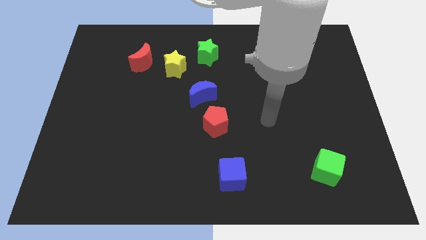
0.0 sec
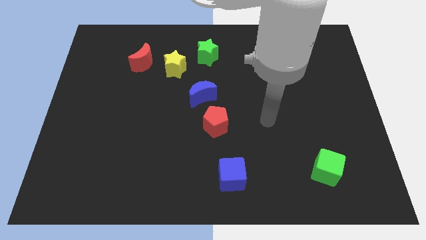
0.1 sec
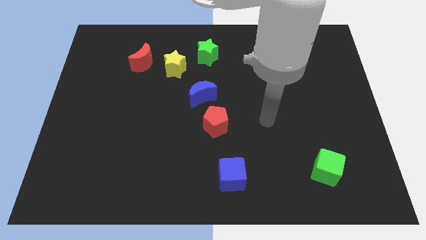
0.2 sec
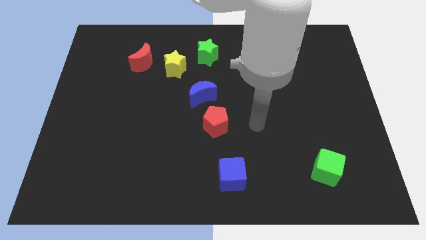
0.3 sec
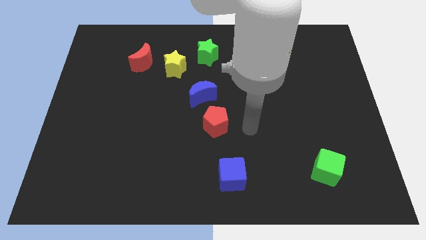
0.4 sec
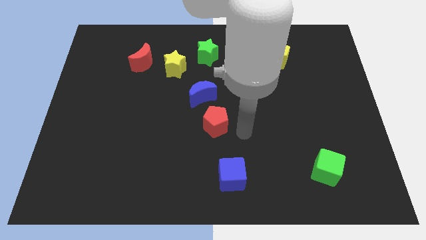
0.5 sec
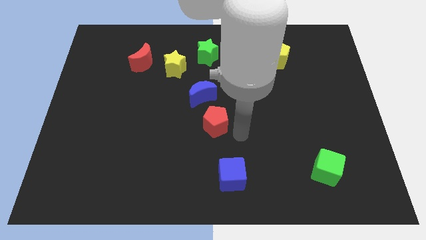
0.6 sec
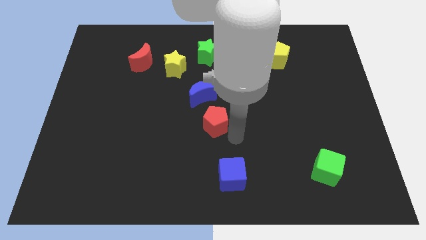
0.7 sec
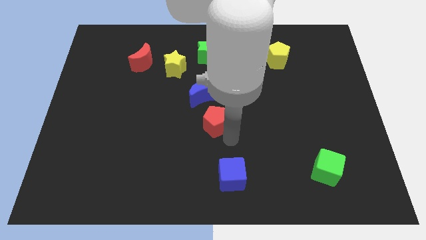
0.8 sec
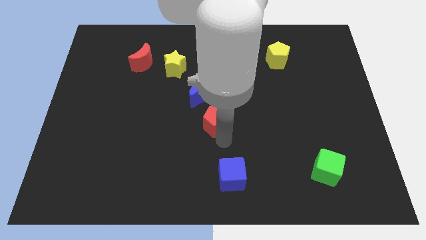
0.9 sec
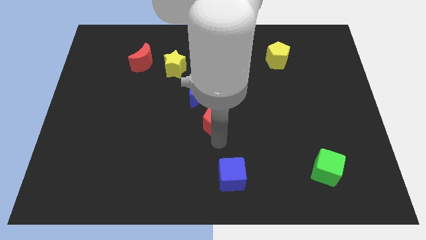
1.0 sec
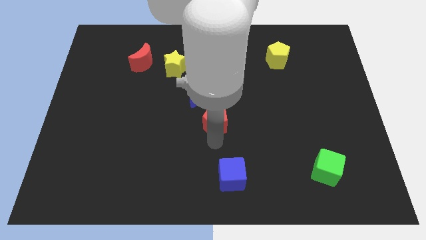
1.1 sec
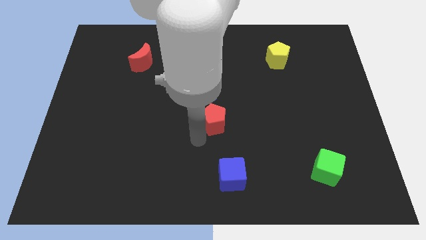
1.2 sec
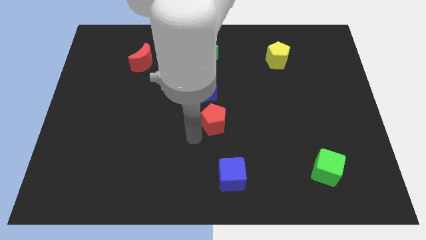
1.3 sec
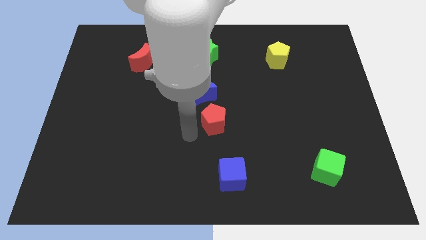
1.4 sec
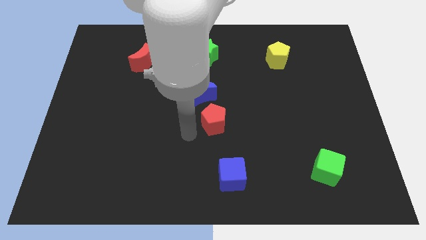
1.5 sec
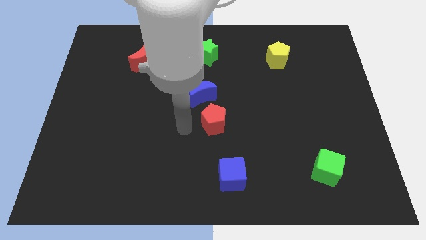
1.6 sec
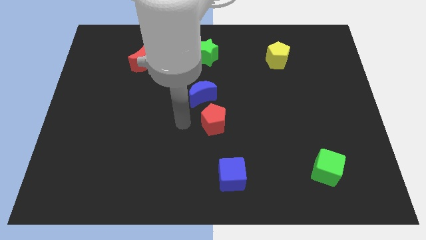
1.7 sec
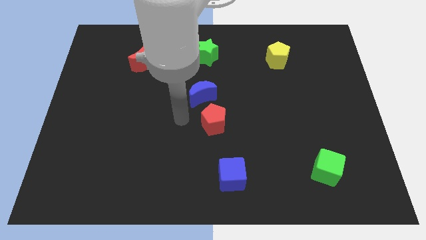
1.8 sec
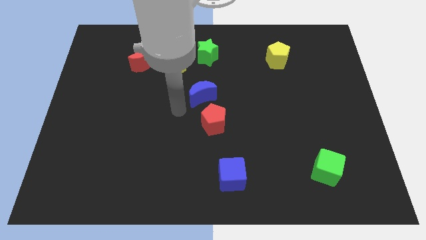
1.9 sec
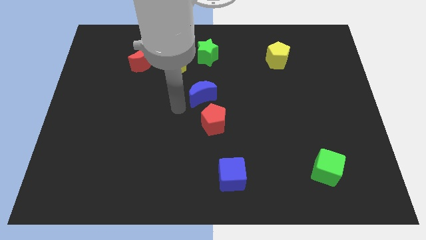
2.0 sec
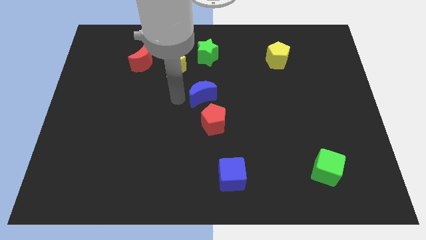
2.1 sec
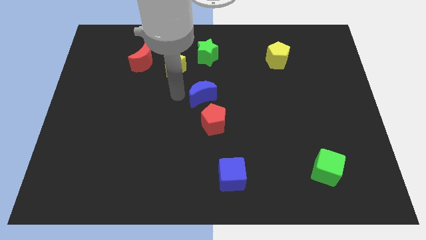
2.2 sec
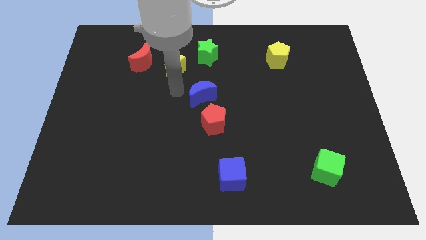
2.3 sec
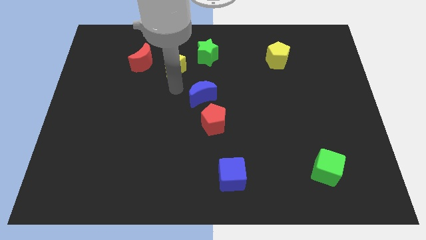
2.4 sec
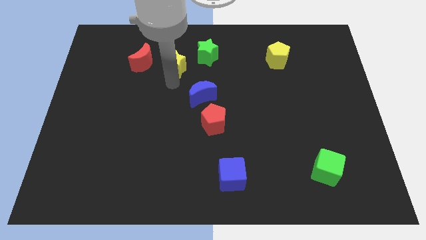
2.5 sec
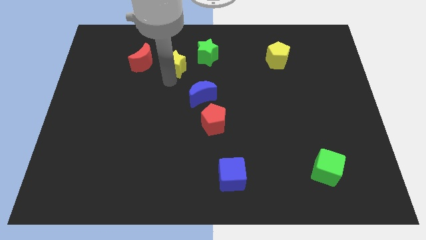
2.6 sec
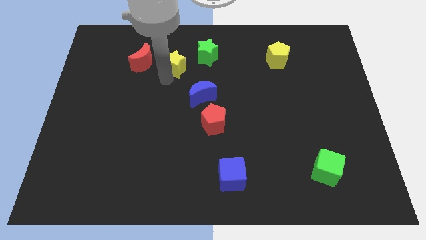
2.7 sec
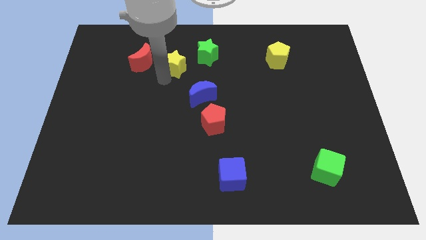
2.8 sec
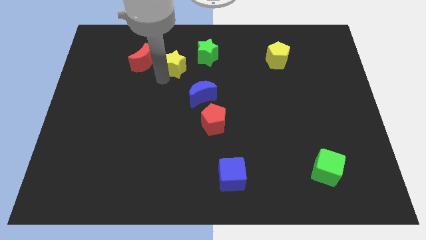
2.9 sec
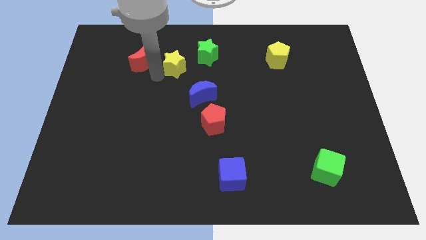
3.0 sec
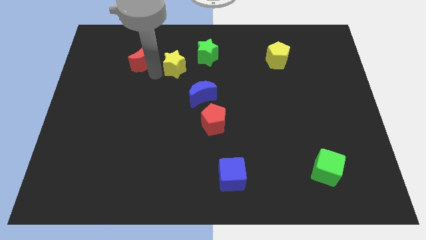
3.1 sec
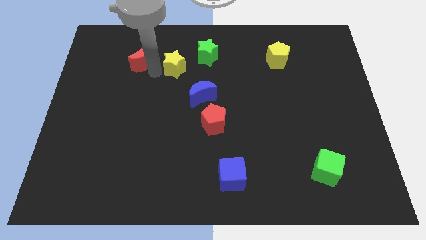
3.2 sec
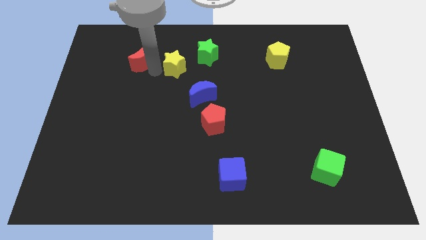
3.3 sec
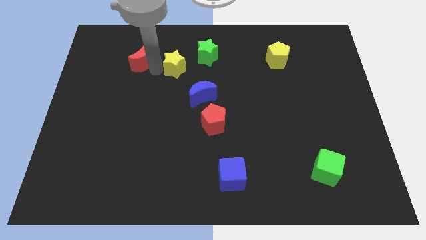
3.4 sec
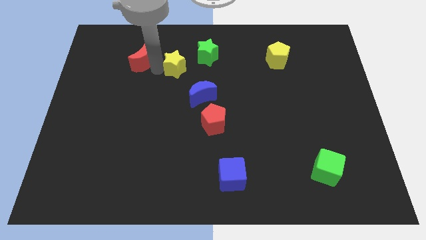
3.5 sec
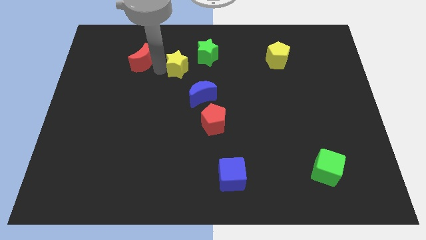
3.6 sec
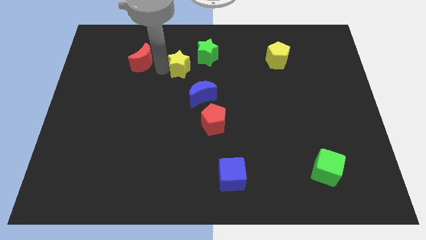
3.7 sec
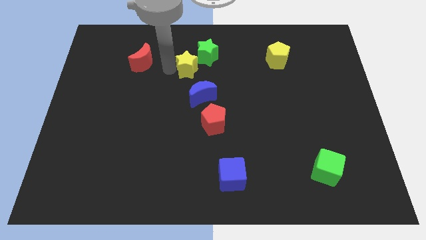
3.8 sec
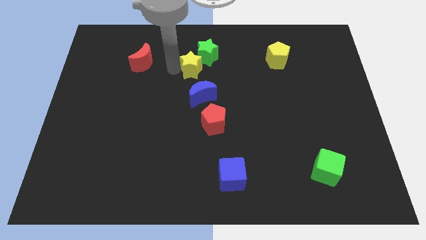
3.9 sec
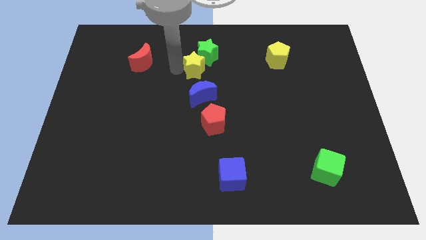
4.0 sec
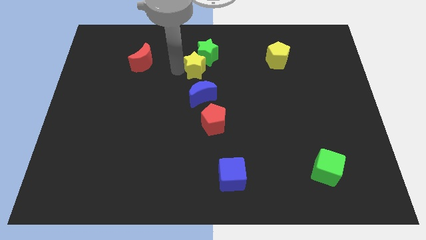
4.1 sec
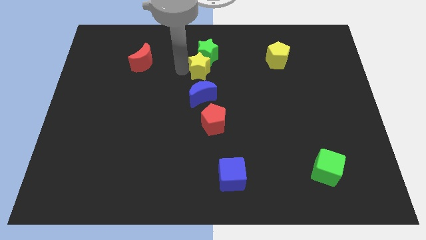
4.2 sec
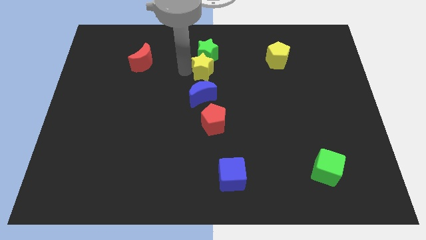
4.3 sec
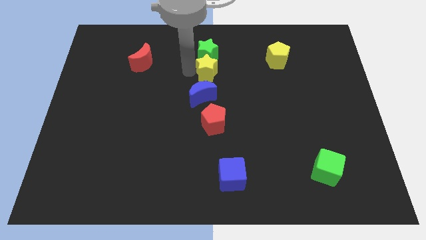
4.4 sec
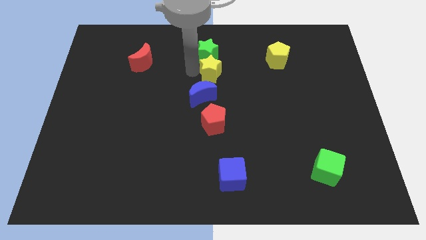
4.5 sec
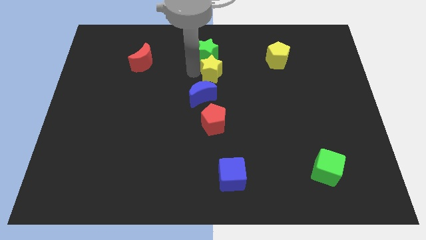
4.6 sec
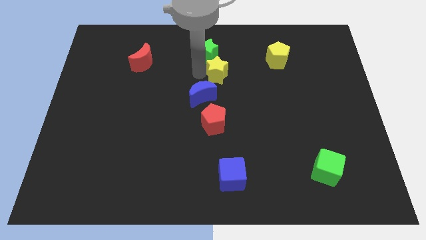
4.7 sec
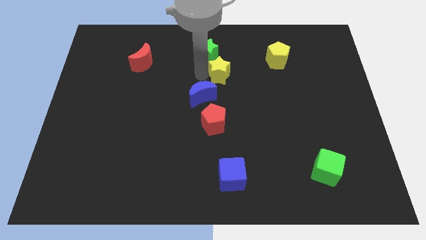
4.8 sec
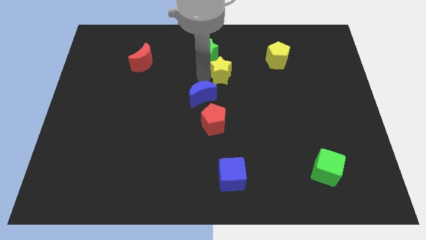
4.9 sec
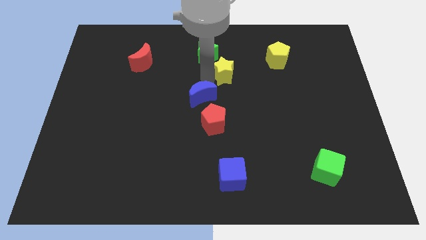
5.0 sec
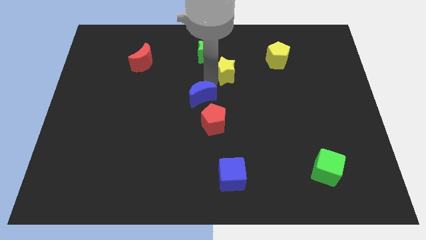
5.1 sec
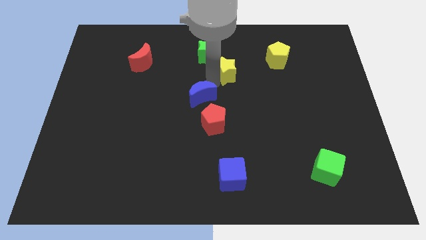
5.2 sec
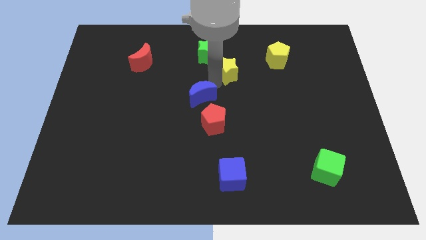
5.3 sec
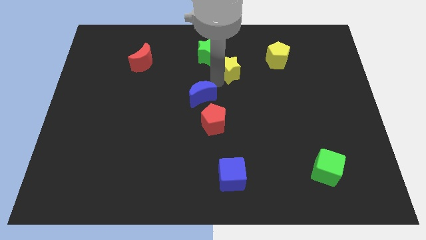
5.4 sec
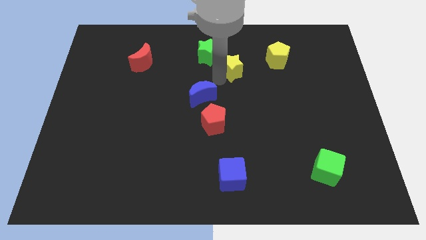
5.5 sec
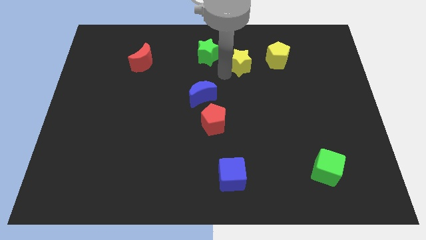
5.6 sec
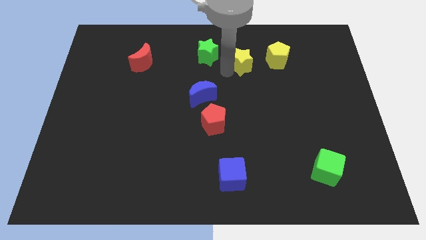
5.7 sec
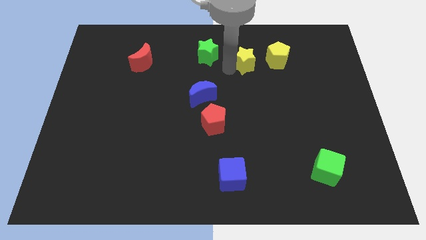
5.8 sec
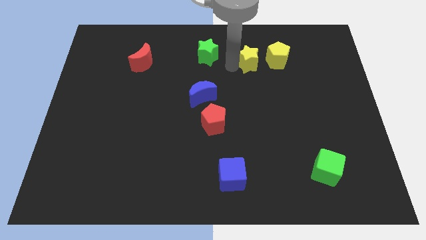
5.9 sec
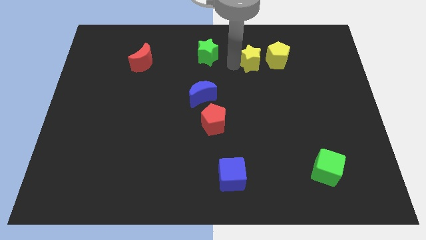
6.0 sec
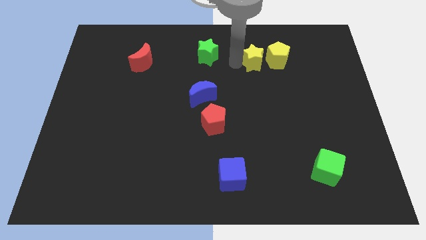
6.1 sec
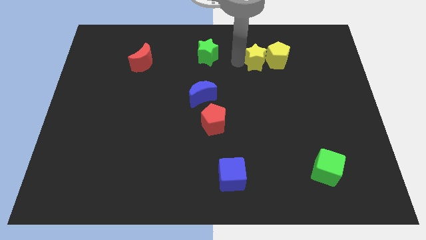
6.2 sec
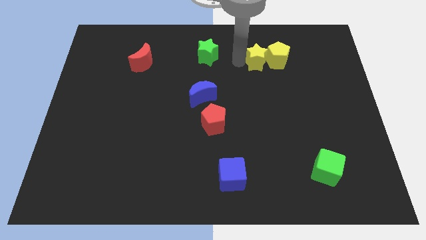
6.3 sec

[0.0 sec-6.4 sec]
push the yellow star close to the yellow pentagon

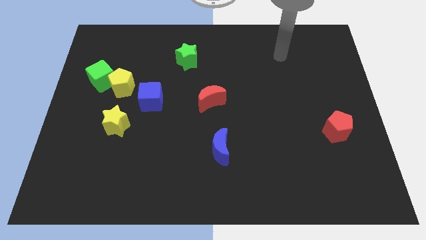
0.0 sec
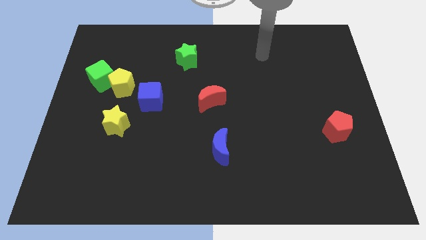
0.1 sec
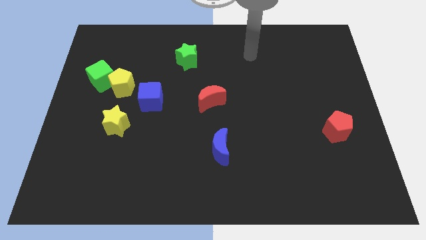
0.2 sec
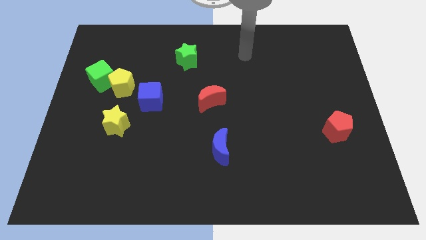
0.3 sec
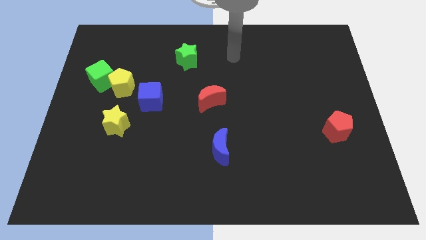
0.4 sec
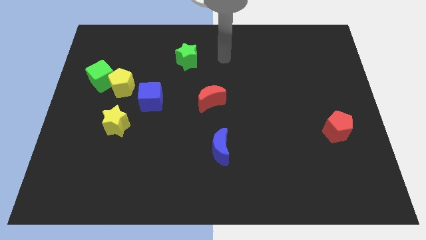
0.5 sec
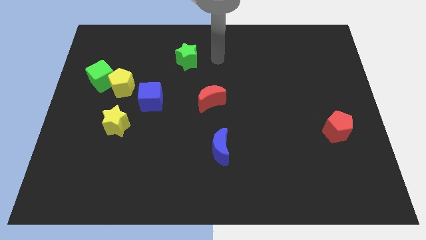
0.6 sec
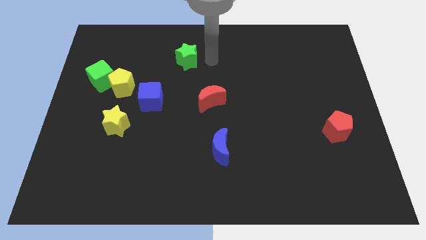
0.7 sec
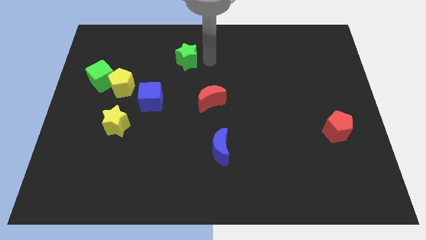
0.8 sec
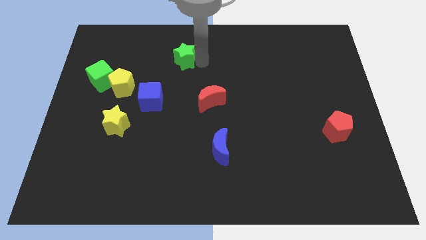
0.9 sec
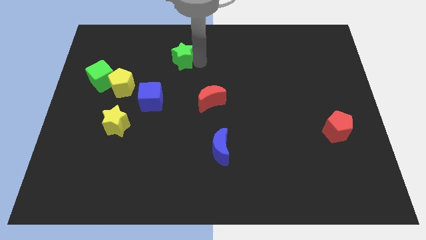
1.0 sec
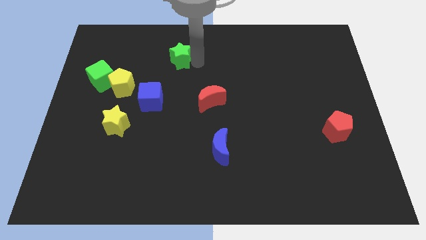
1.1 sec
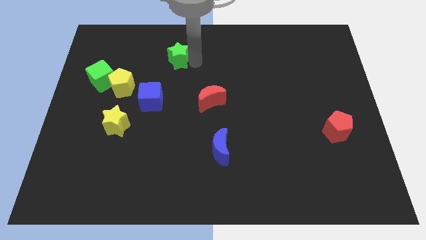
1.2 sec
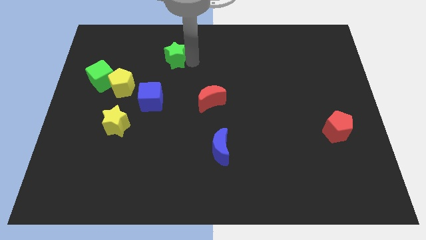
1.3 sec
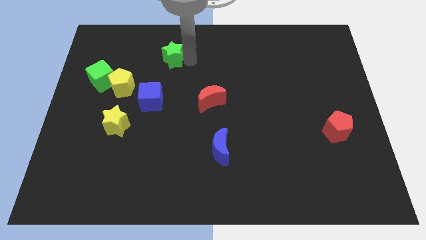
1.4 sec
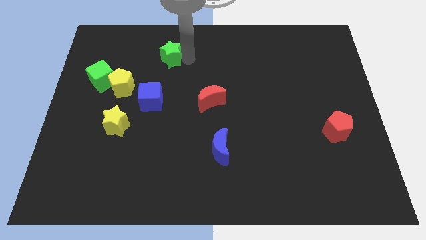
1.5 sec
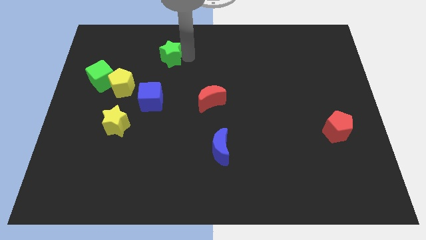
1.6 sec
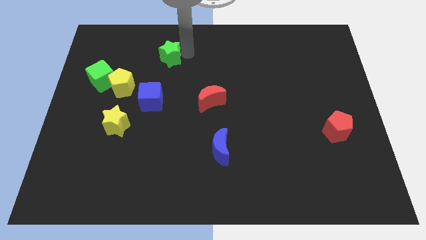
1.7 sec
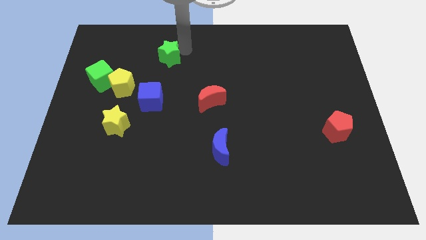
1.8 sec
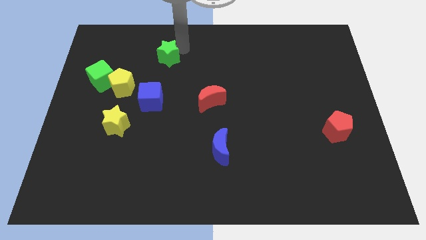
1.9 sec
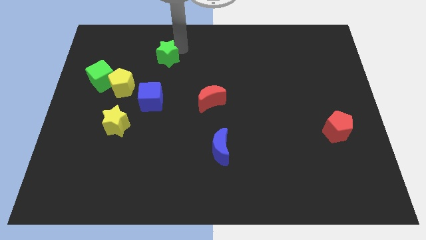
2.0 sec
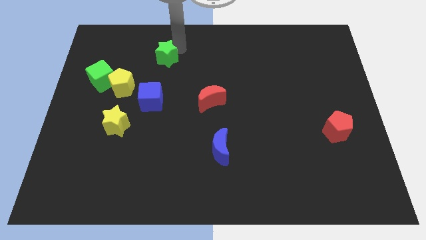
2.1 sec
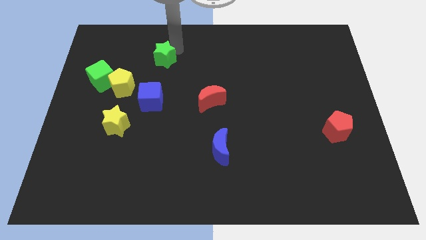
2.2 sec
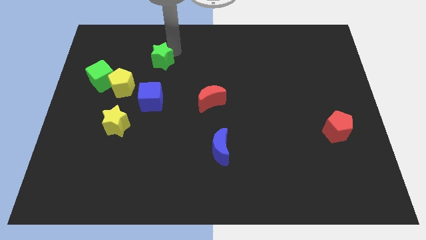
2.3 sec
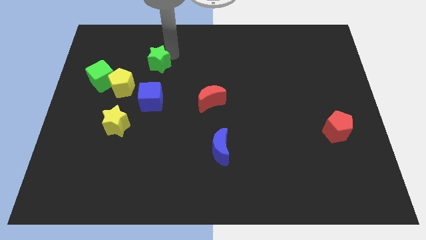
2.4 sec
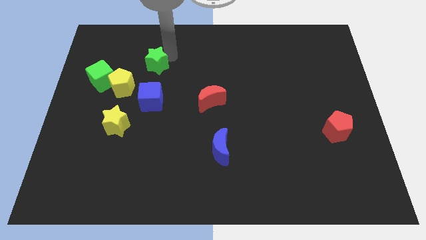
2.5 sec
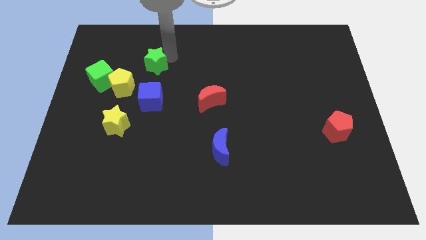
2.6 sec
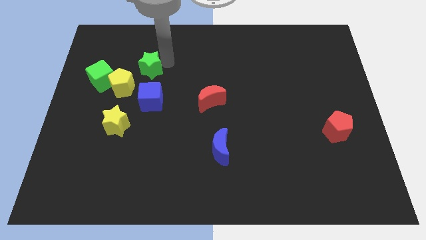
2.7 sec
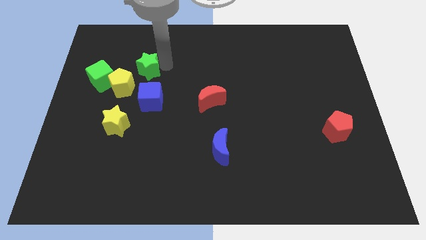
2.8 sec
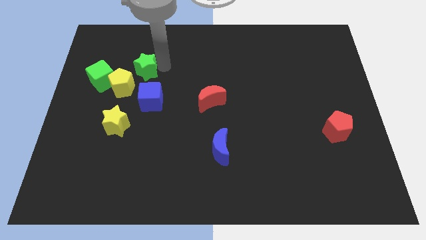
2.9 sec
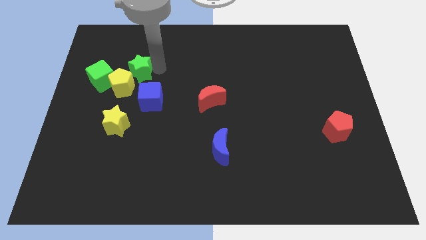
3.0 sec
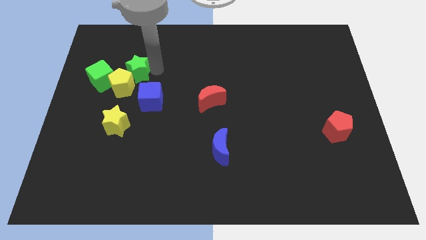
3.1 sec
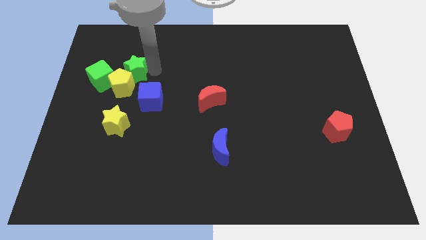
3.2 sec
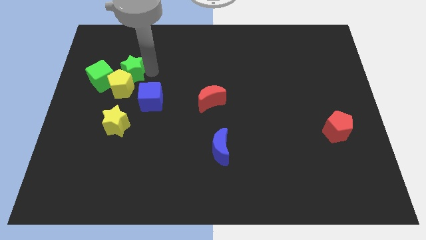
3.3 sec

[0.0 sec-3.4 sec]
push the green star towards the yellow pentagon
